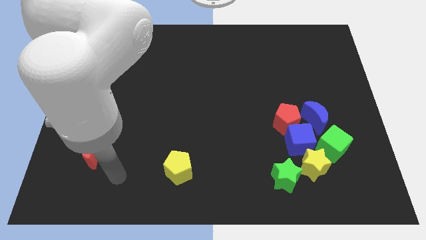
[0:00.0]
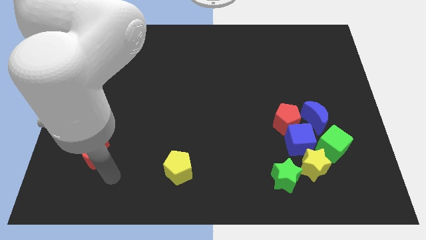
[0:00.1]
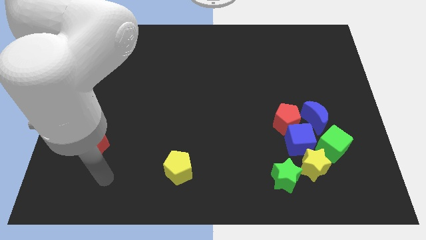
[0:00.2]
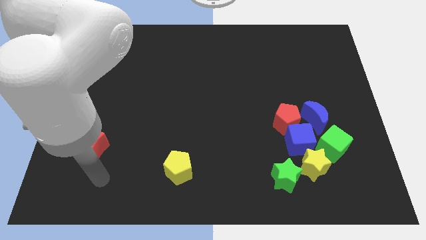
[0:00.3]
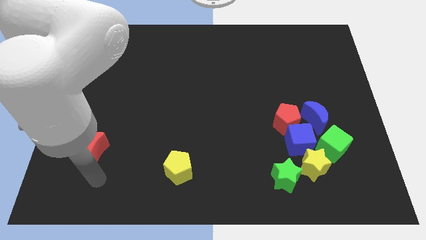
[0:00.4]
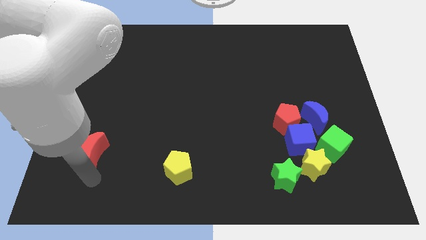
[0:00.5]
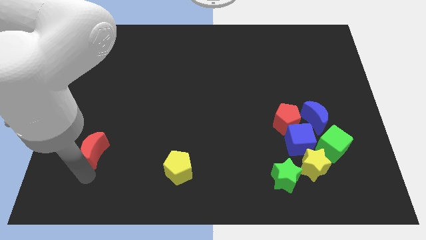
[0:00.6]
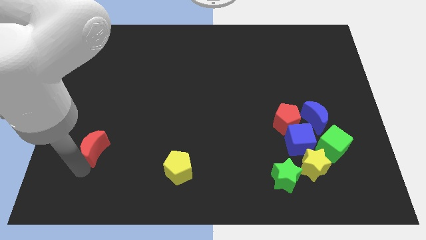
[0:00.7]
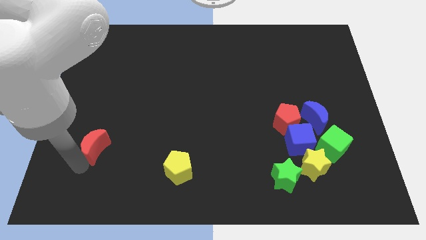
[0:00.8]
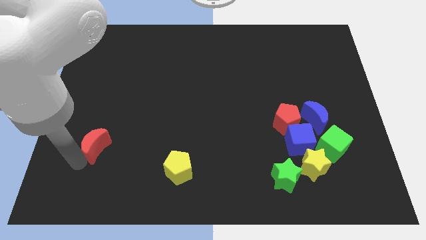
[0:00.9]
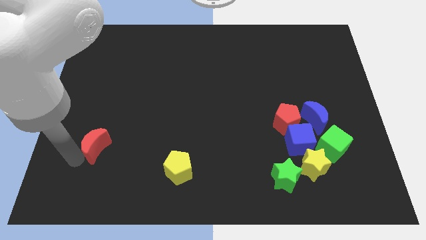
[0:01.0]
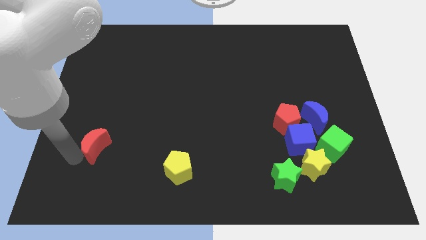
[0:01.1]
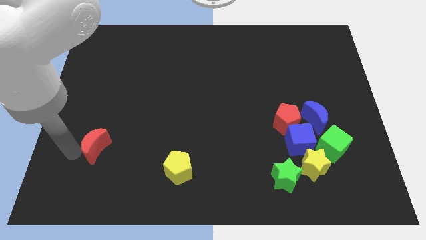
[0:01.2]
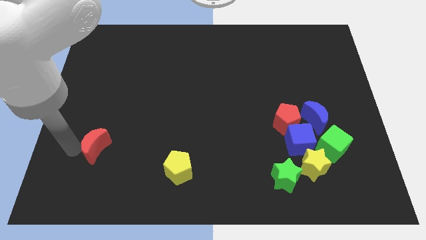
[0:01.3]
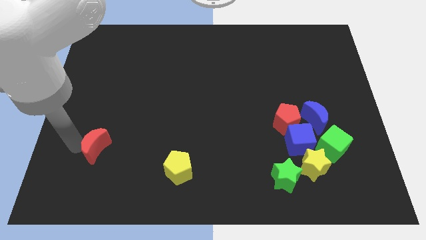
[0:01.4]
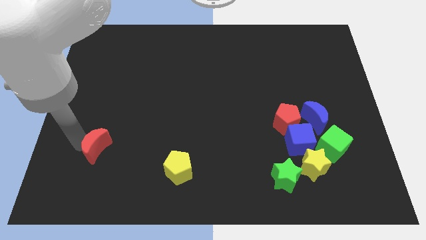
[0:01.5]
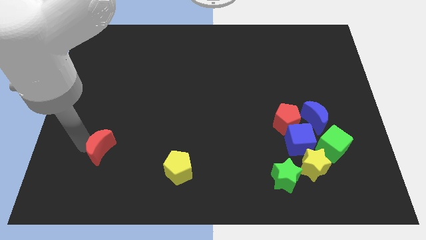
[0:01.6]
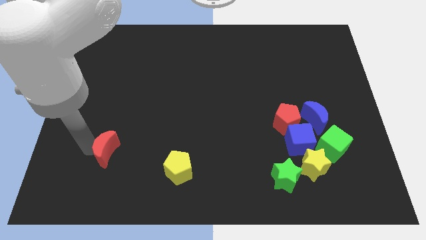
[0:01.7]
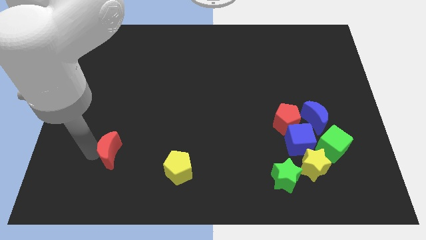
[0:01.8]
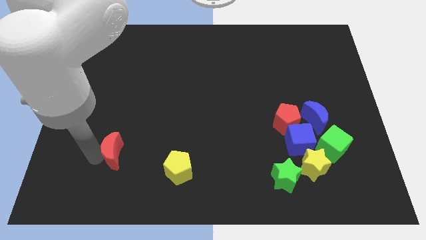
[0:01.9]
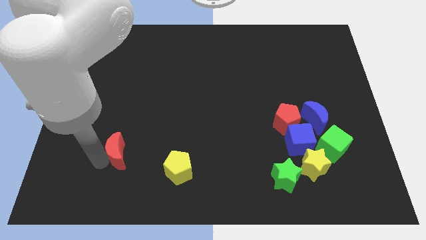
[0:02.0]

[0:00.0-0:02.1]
move the red moon towards the yellow pentagon

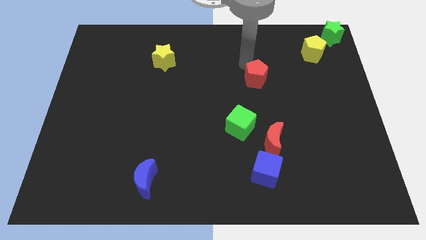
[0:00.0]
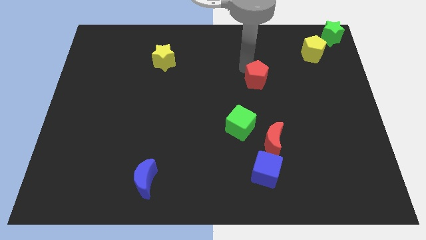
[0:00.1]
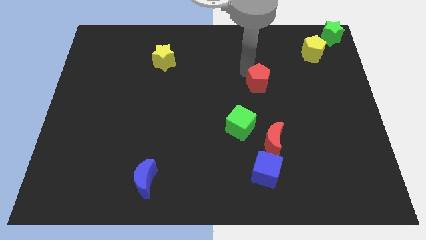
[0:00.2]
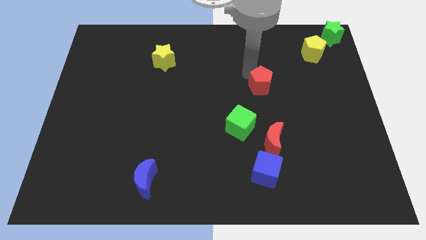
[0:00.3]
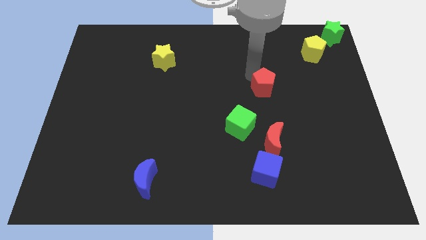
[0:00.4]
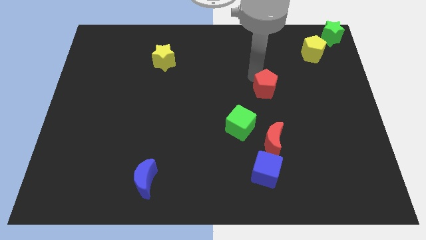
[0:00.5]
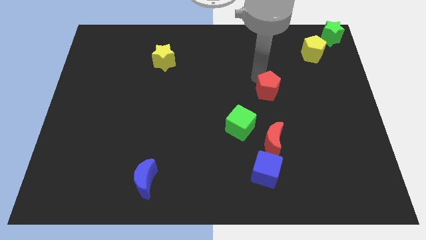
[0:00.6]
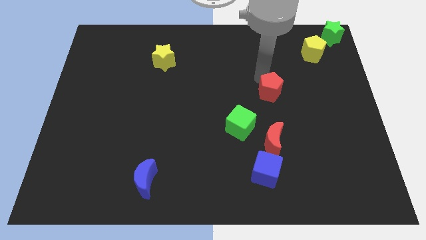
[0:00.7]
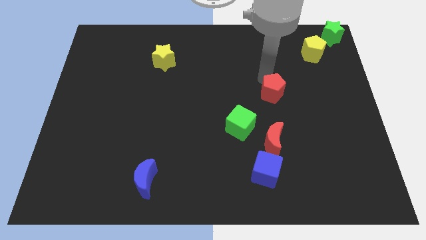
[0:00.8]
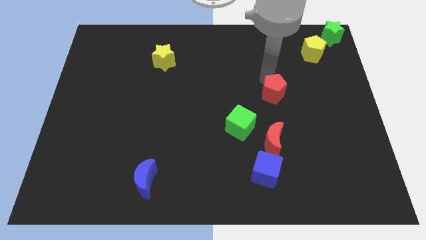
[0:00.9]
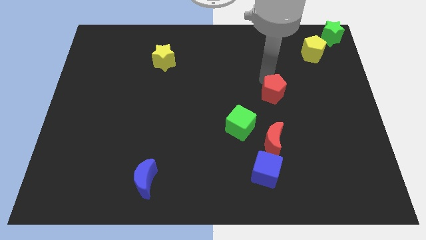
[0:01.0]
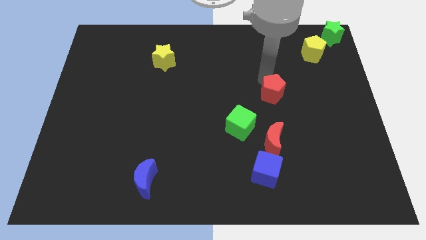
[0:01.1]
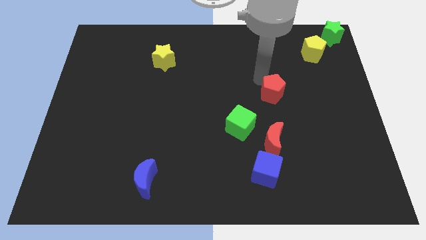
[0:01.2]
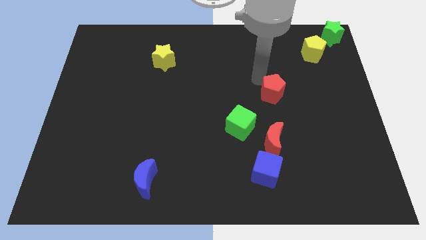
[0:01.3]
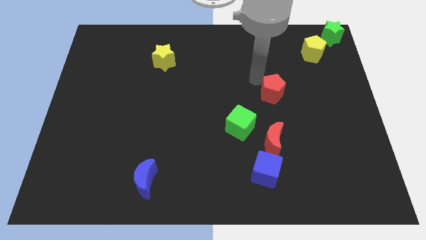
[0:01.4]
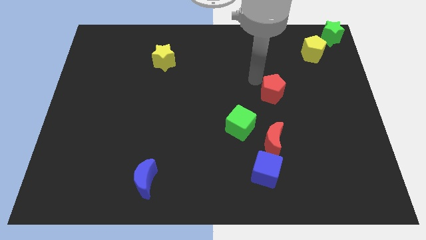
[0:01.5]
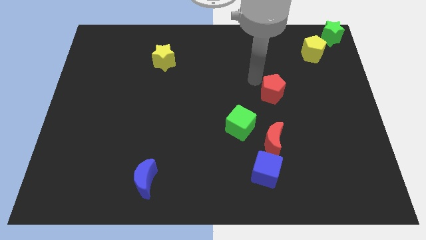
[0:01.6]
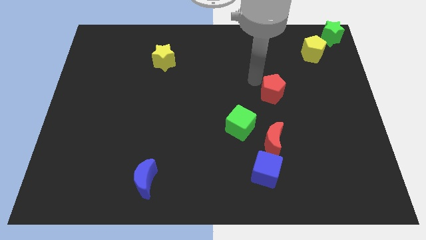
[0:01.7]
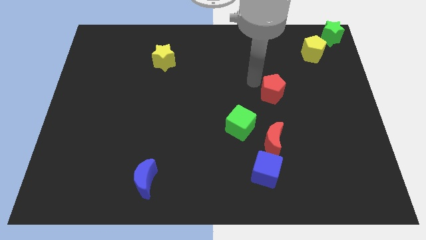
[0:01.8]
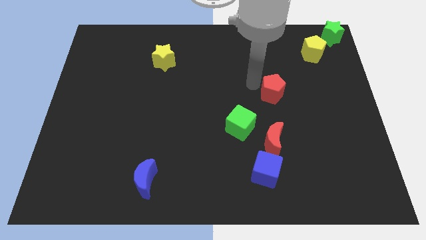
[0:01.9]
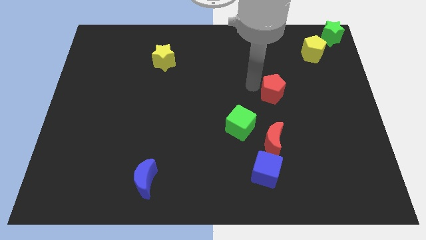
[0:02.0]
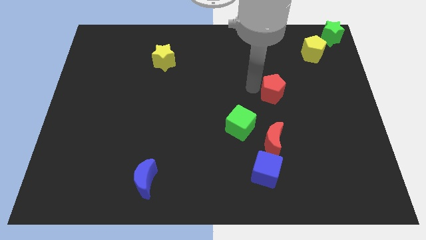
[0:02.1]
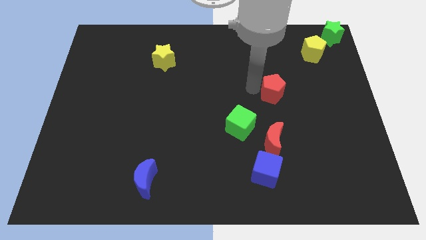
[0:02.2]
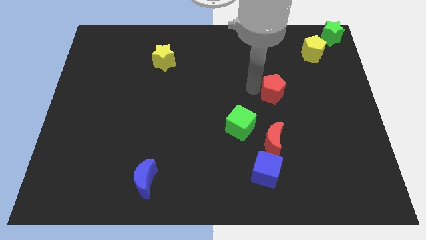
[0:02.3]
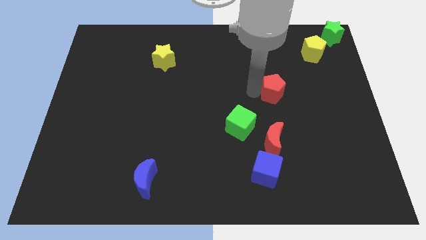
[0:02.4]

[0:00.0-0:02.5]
place red pentagon above red crescent

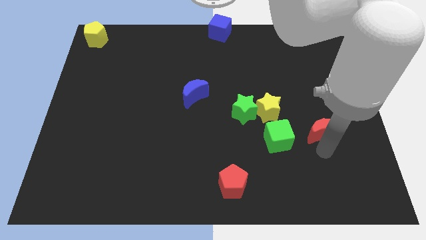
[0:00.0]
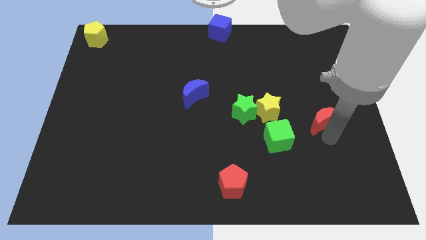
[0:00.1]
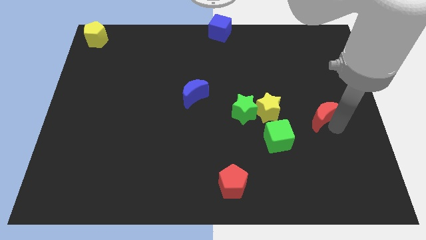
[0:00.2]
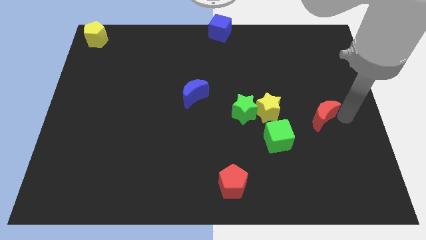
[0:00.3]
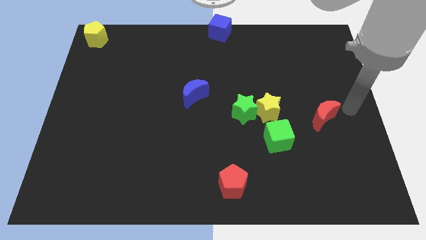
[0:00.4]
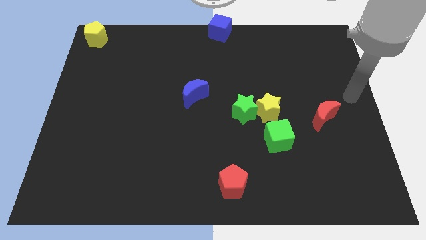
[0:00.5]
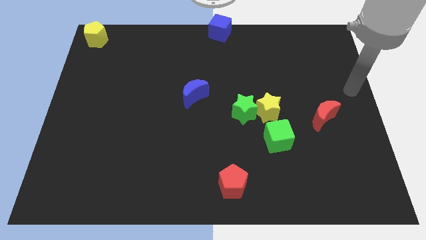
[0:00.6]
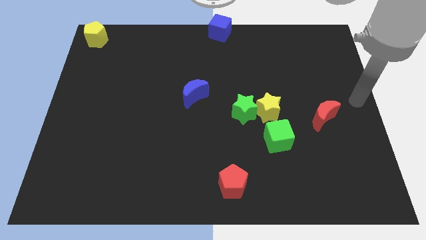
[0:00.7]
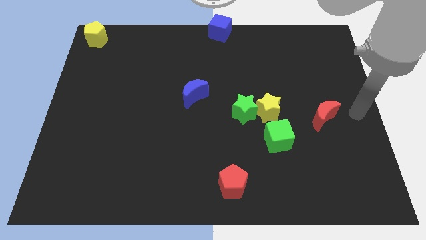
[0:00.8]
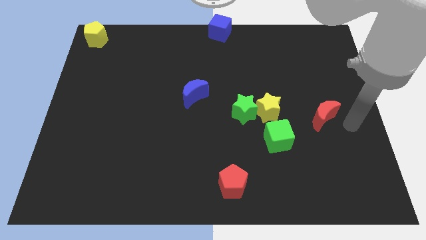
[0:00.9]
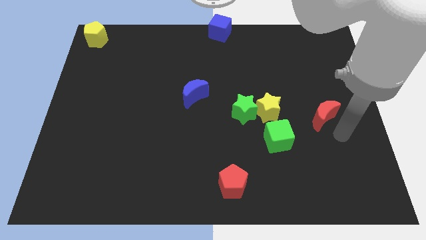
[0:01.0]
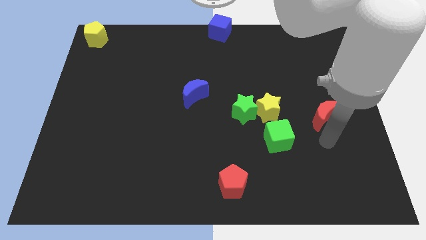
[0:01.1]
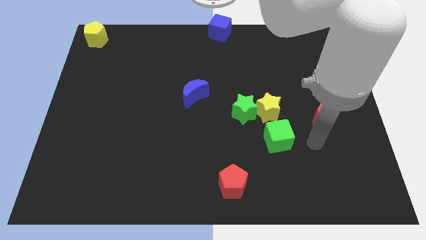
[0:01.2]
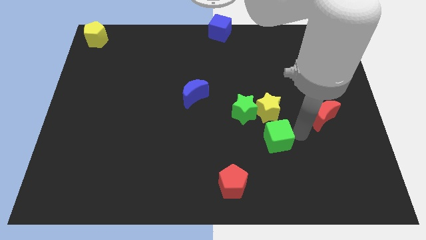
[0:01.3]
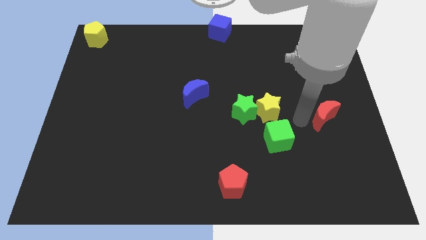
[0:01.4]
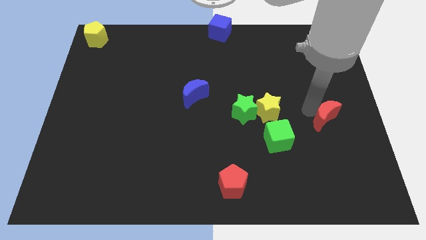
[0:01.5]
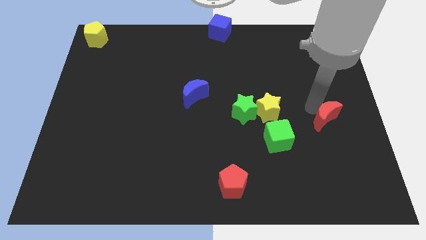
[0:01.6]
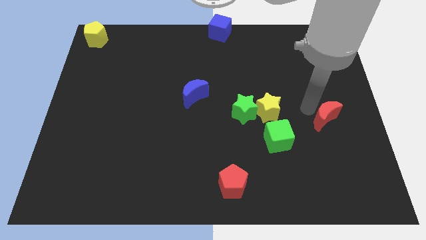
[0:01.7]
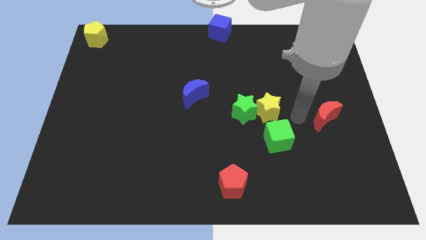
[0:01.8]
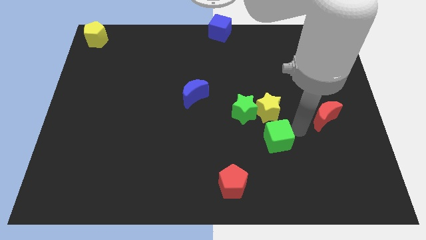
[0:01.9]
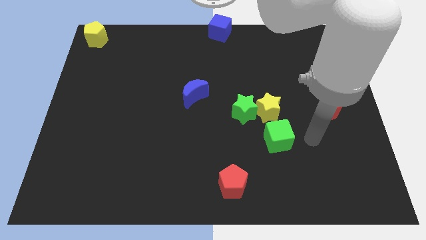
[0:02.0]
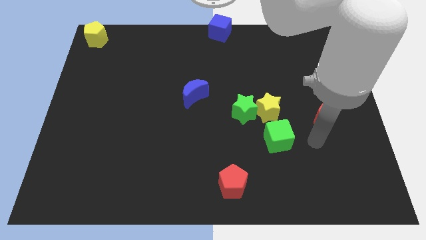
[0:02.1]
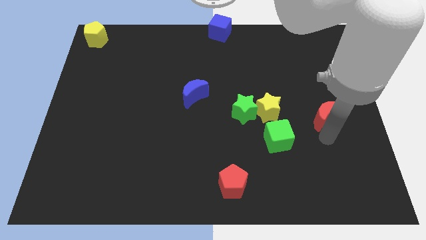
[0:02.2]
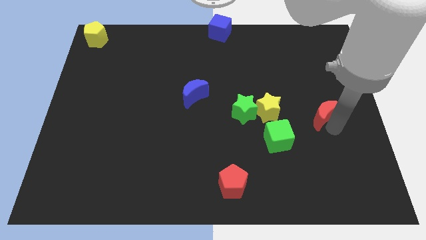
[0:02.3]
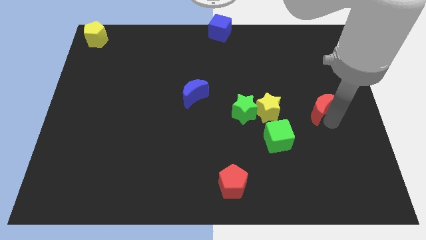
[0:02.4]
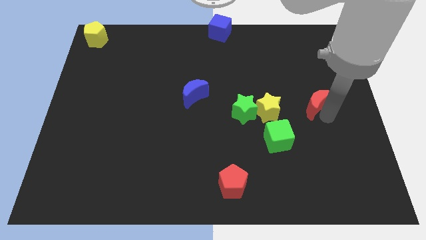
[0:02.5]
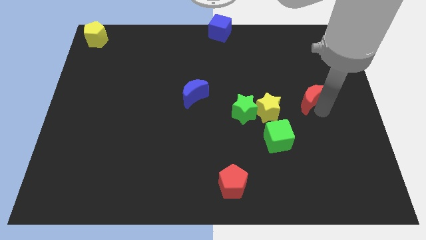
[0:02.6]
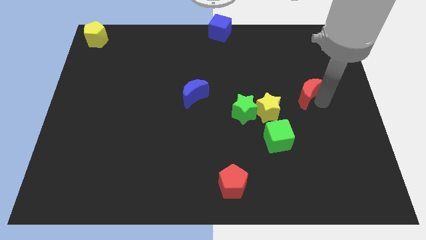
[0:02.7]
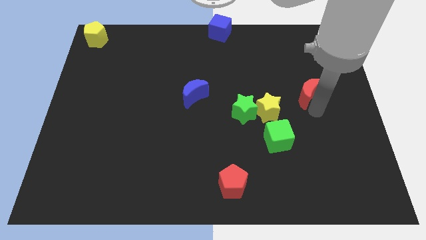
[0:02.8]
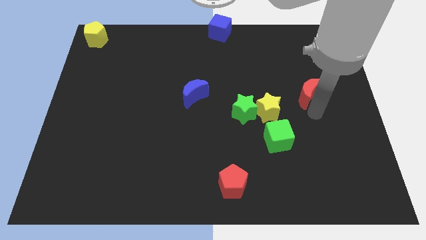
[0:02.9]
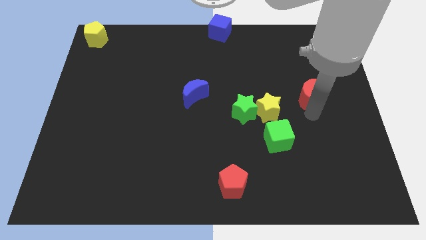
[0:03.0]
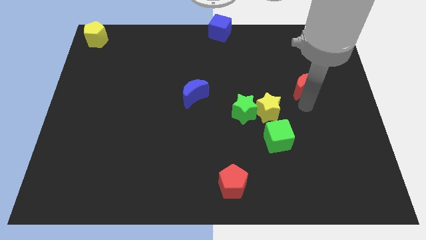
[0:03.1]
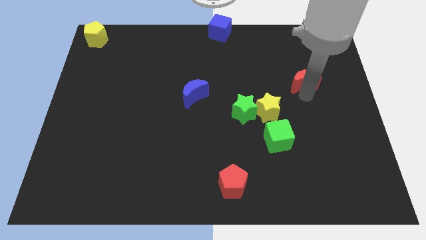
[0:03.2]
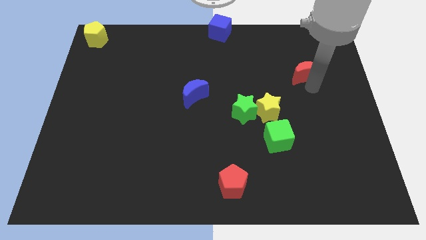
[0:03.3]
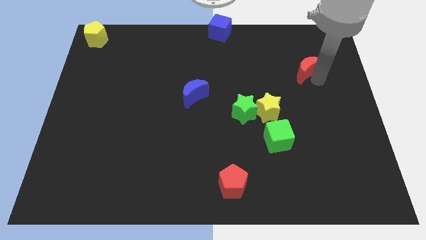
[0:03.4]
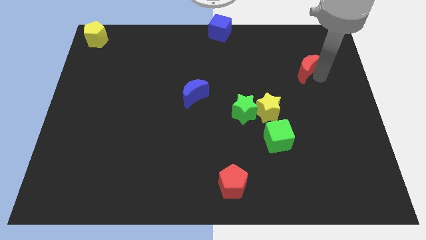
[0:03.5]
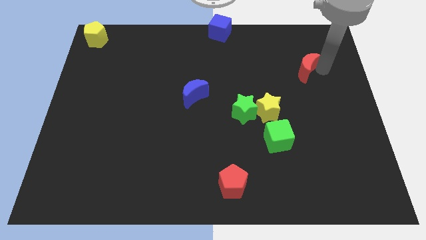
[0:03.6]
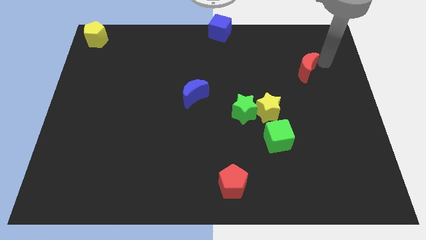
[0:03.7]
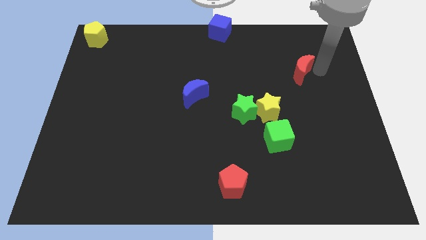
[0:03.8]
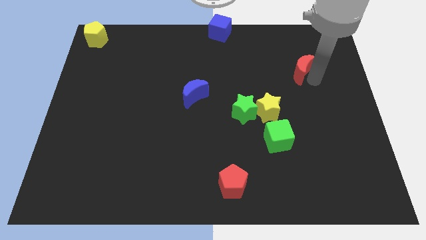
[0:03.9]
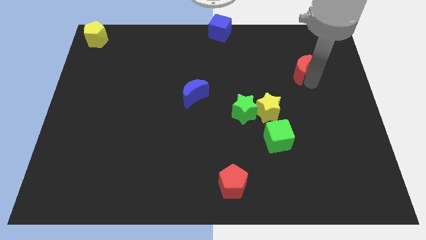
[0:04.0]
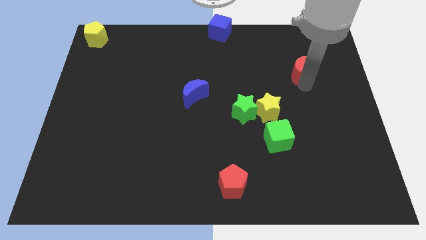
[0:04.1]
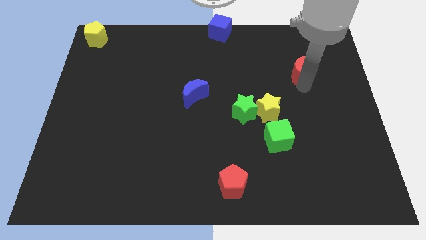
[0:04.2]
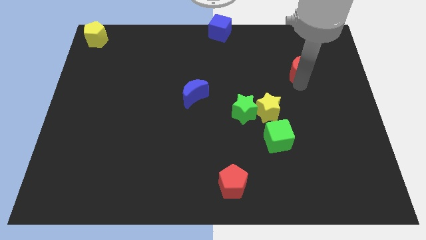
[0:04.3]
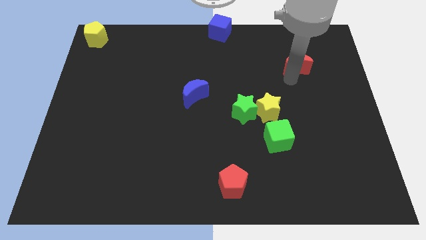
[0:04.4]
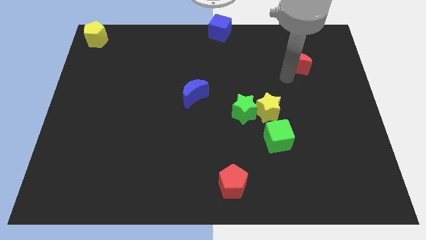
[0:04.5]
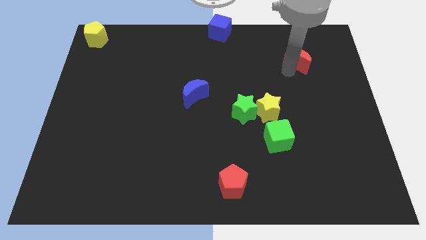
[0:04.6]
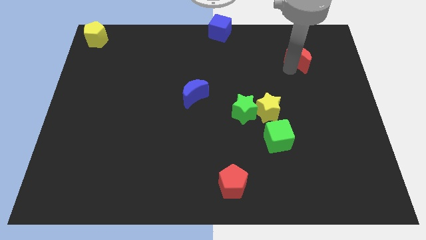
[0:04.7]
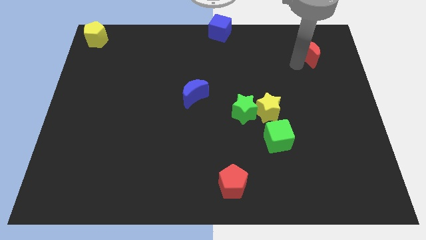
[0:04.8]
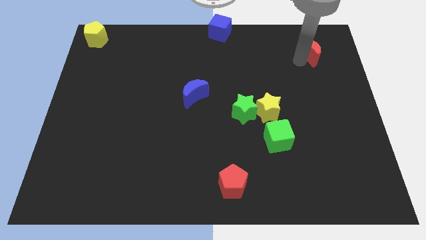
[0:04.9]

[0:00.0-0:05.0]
move the red crescent to the top right of the board
